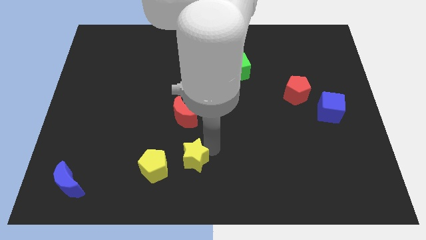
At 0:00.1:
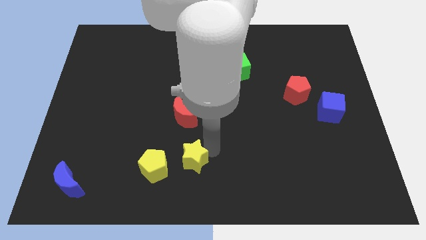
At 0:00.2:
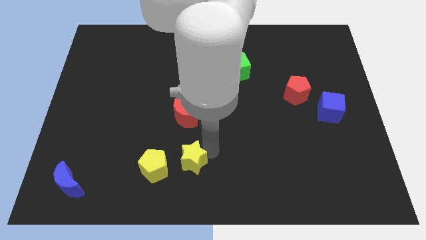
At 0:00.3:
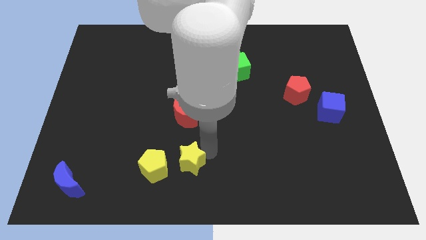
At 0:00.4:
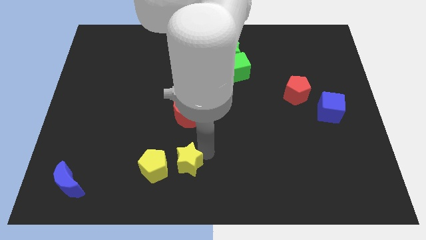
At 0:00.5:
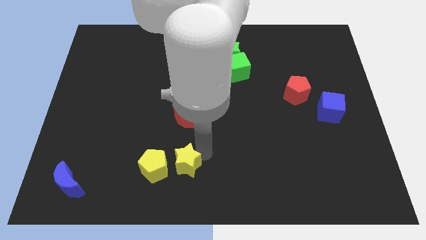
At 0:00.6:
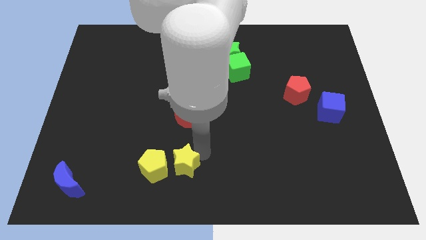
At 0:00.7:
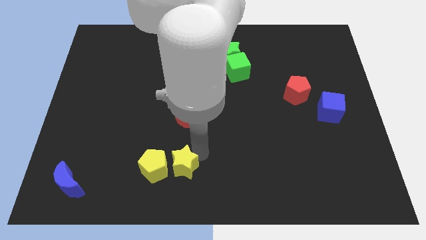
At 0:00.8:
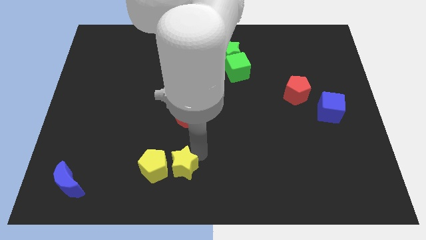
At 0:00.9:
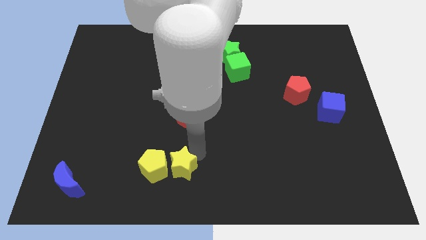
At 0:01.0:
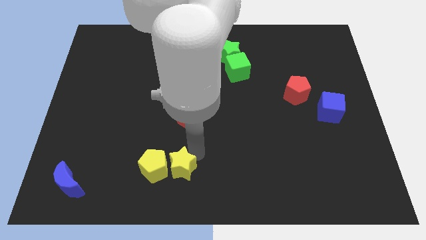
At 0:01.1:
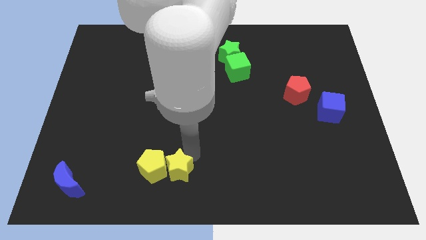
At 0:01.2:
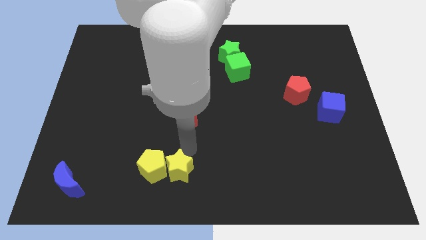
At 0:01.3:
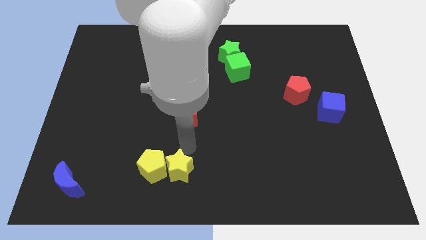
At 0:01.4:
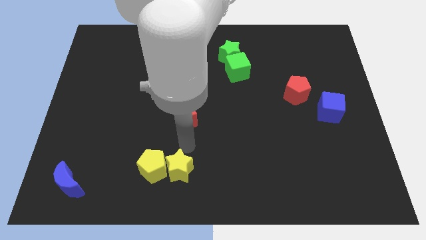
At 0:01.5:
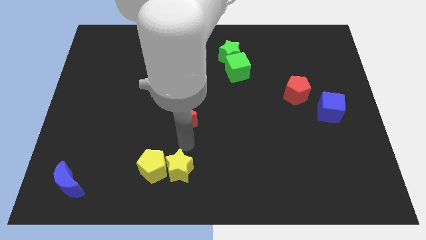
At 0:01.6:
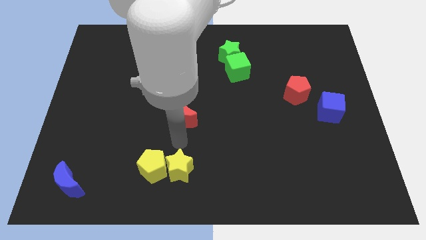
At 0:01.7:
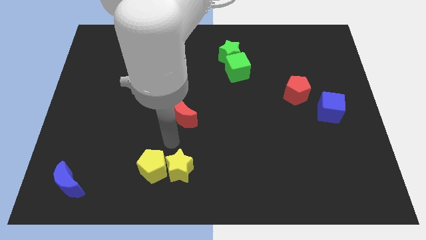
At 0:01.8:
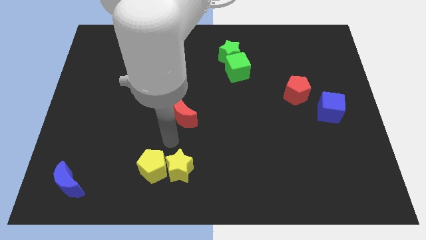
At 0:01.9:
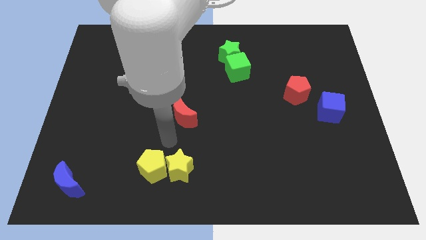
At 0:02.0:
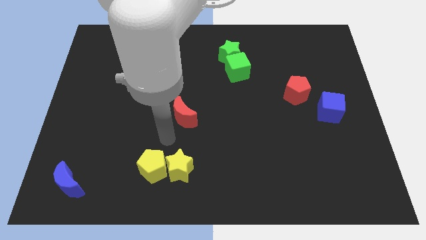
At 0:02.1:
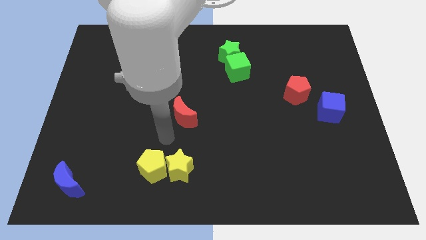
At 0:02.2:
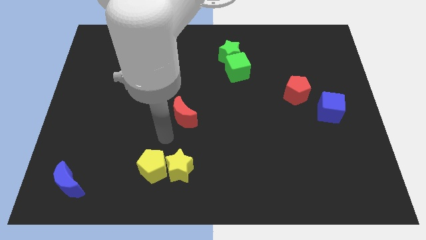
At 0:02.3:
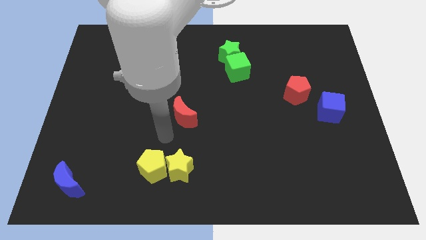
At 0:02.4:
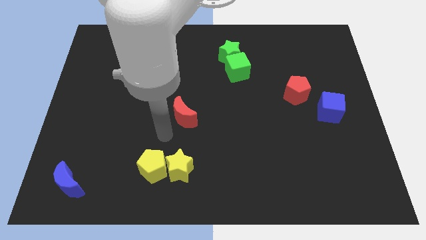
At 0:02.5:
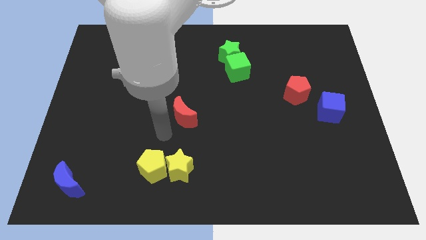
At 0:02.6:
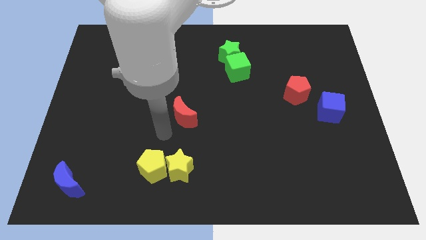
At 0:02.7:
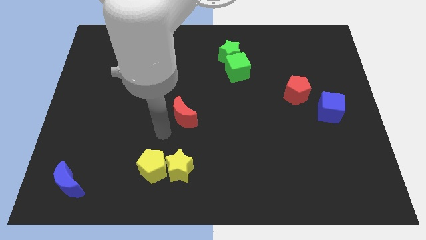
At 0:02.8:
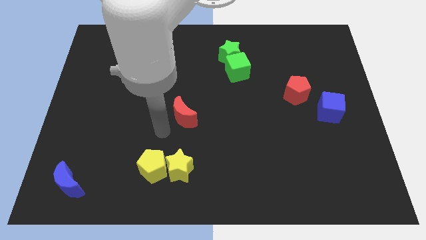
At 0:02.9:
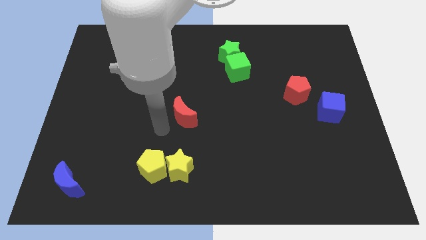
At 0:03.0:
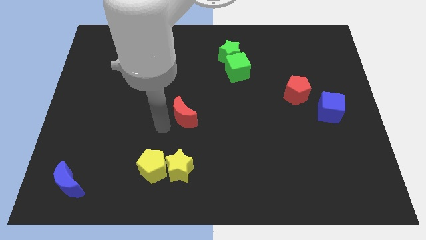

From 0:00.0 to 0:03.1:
move the yellow star into the yellow pentagon

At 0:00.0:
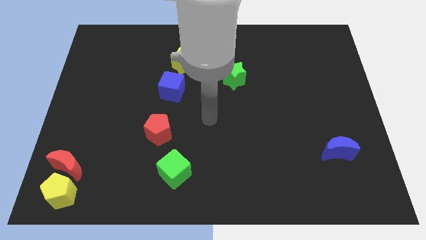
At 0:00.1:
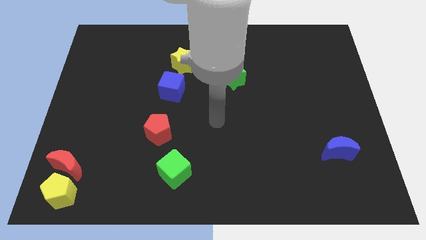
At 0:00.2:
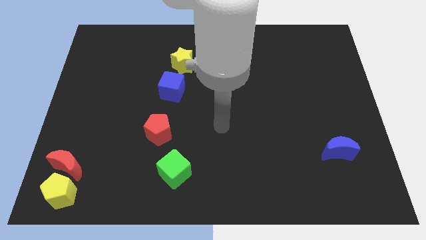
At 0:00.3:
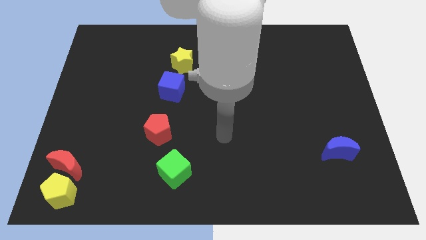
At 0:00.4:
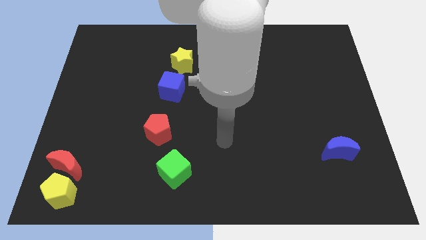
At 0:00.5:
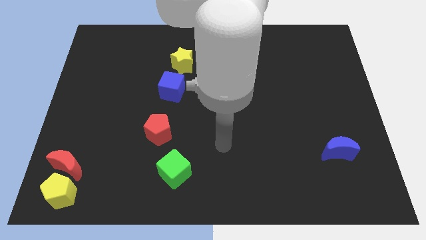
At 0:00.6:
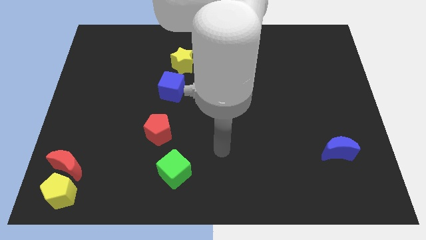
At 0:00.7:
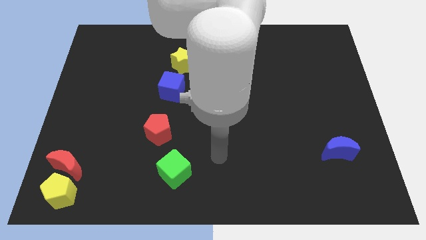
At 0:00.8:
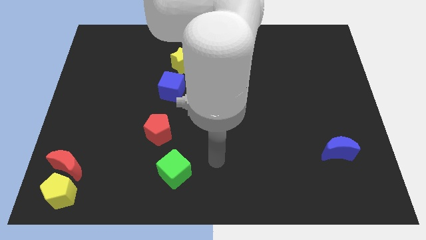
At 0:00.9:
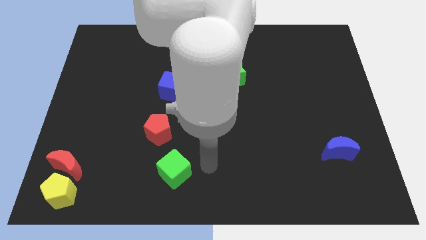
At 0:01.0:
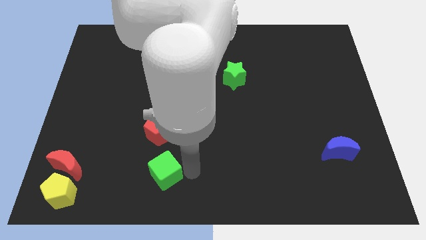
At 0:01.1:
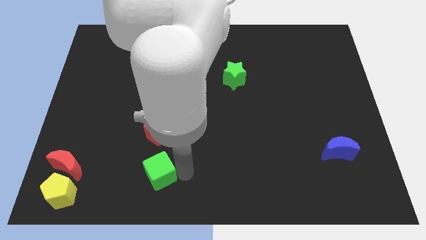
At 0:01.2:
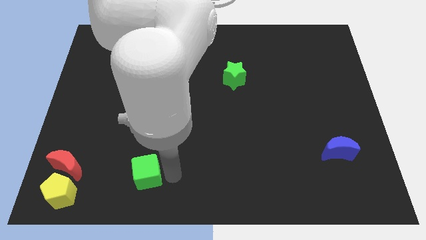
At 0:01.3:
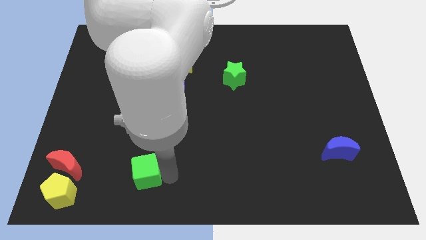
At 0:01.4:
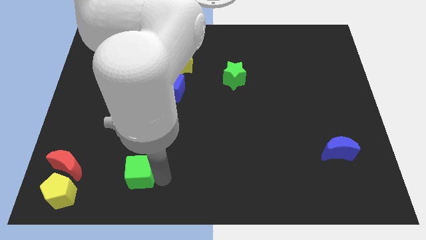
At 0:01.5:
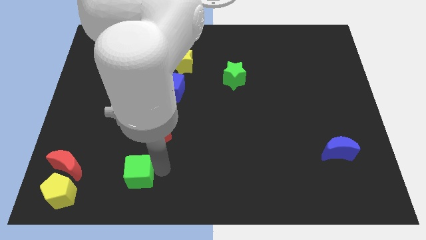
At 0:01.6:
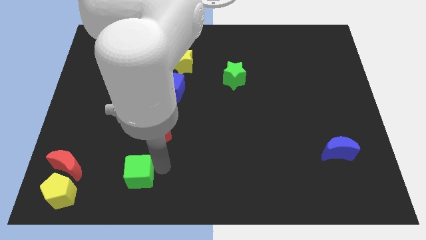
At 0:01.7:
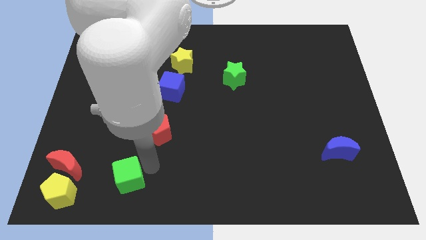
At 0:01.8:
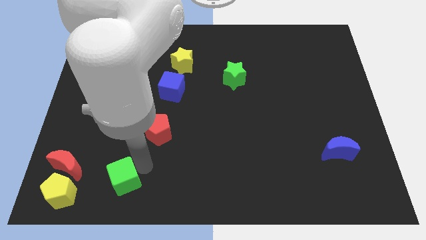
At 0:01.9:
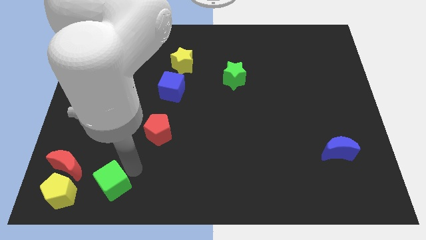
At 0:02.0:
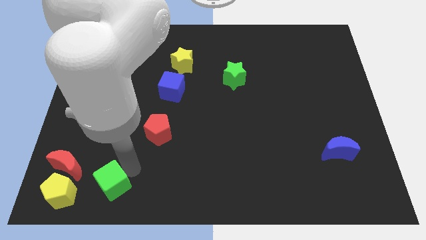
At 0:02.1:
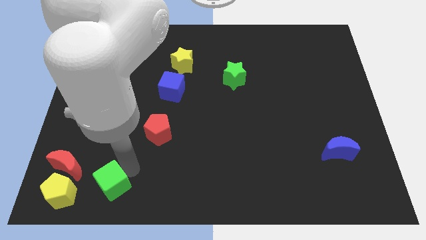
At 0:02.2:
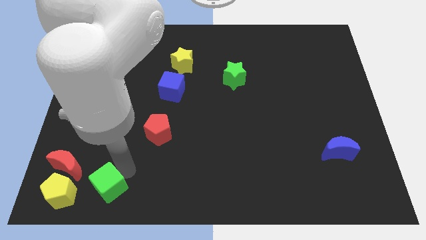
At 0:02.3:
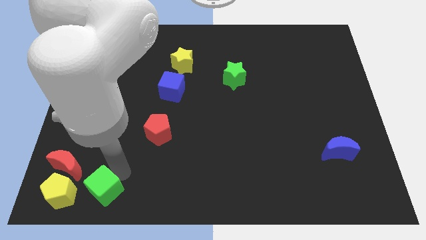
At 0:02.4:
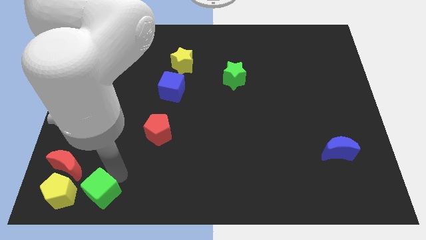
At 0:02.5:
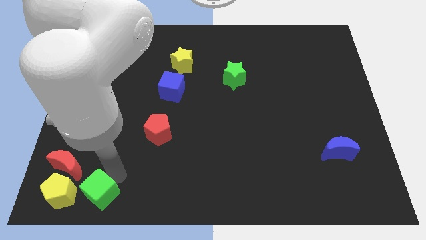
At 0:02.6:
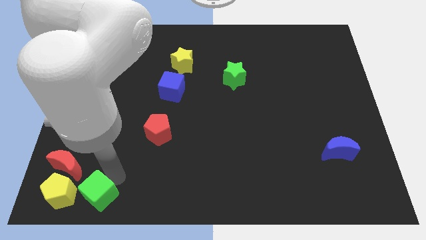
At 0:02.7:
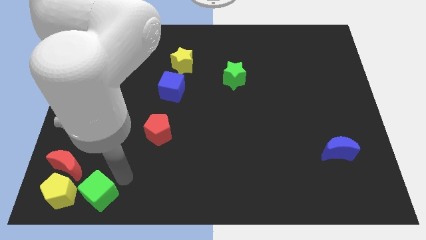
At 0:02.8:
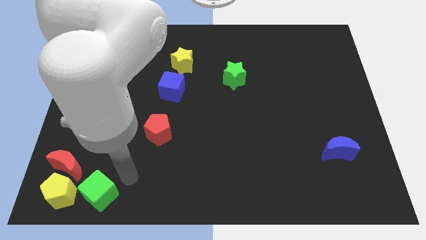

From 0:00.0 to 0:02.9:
move the green cube right to the yellow pentagon

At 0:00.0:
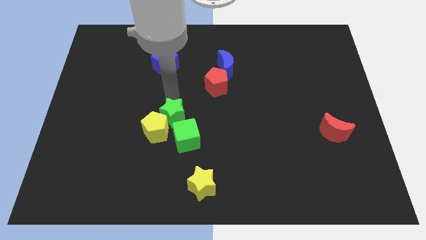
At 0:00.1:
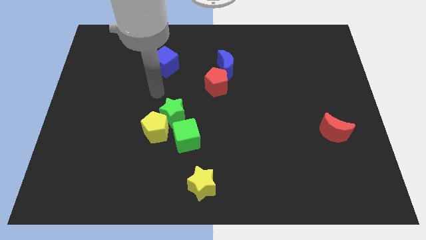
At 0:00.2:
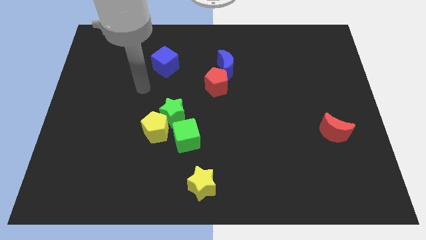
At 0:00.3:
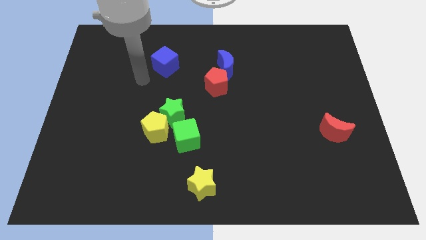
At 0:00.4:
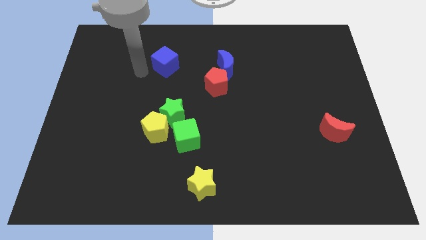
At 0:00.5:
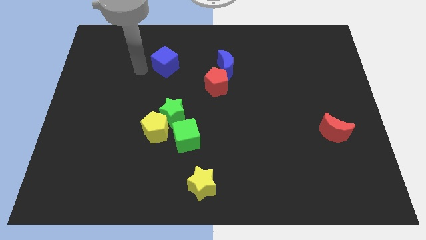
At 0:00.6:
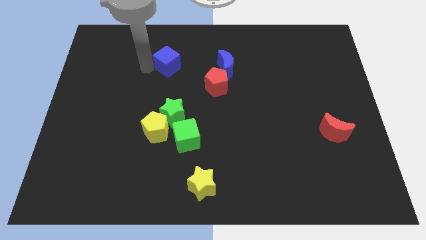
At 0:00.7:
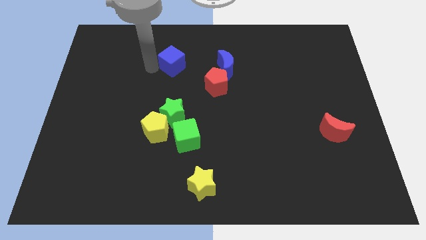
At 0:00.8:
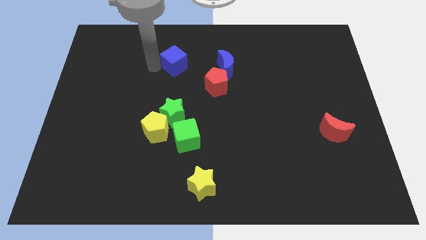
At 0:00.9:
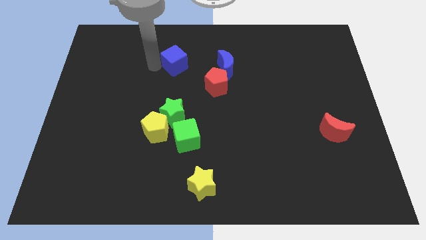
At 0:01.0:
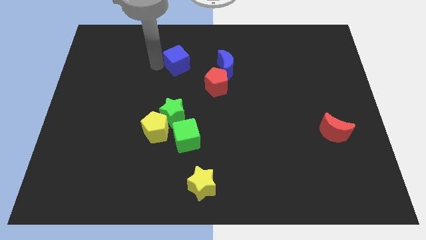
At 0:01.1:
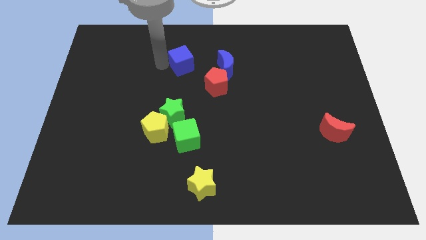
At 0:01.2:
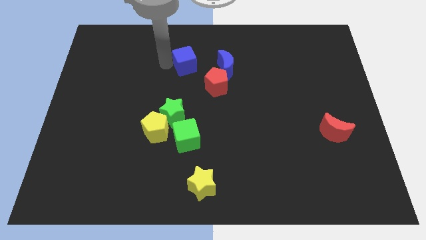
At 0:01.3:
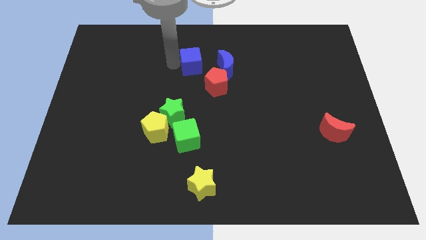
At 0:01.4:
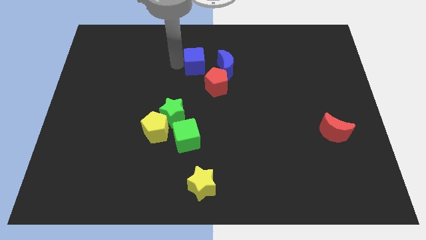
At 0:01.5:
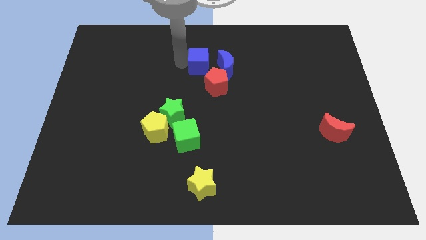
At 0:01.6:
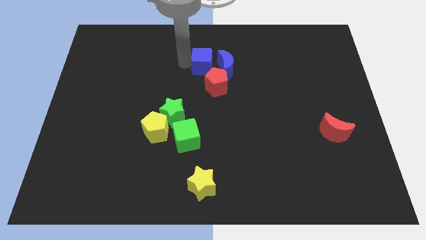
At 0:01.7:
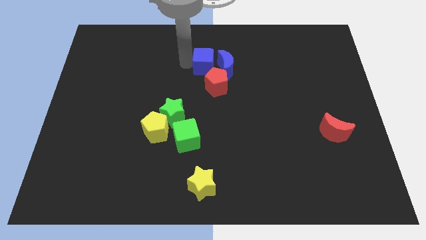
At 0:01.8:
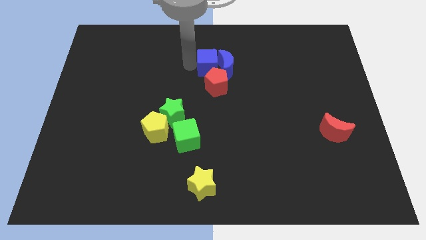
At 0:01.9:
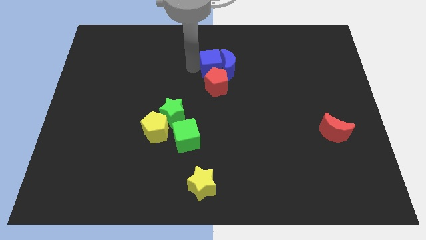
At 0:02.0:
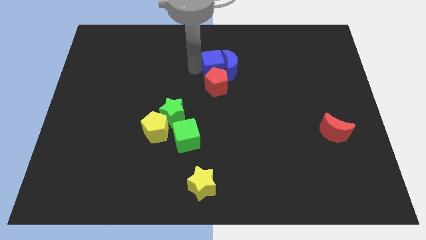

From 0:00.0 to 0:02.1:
move blue cube into blue moon

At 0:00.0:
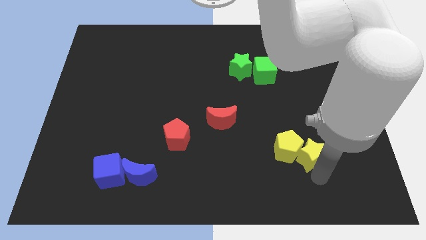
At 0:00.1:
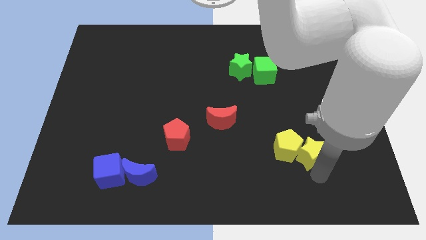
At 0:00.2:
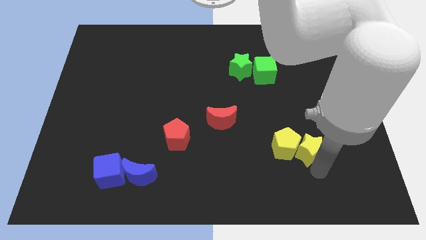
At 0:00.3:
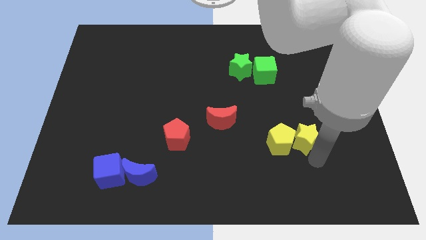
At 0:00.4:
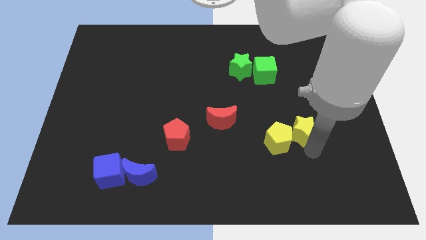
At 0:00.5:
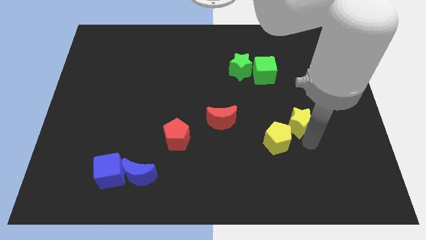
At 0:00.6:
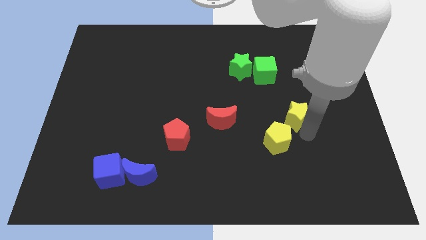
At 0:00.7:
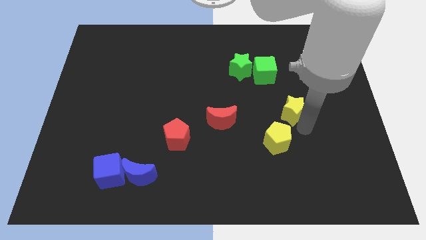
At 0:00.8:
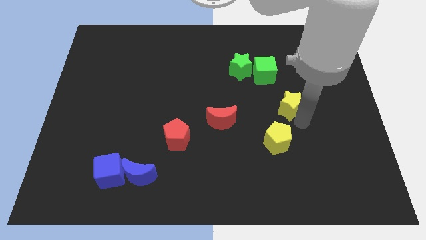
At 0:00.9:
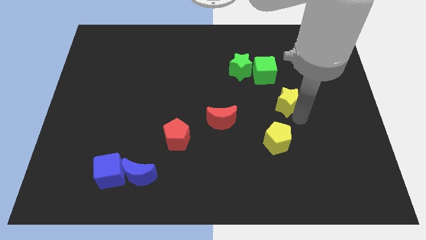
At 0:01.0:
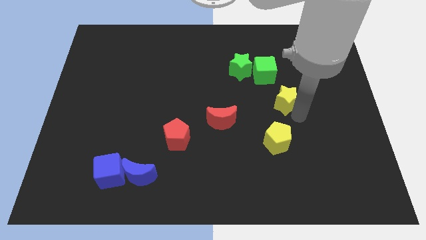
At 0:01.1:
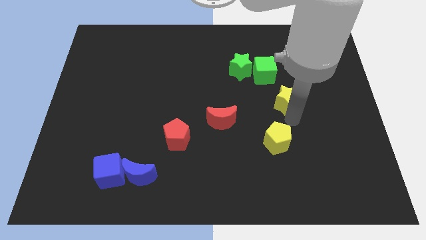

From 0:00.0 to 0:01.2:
push yellow star towards green cube
